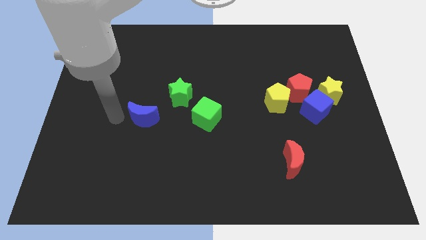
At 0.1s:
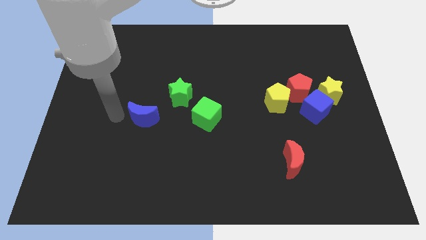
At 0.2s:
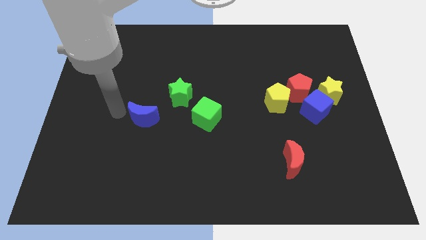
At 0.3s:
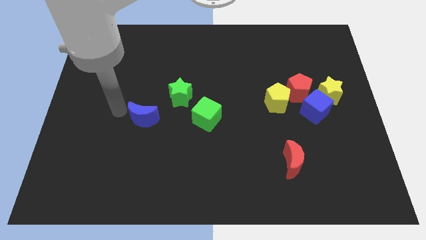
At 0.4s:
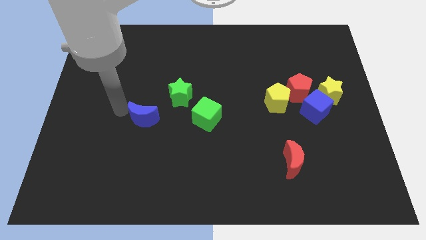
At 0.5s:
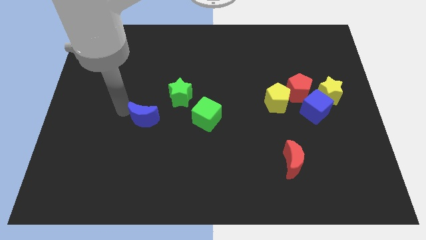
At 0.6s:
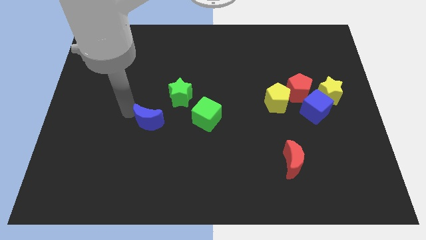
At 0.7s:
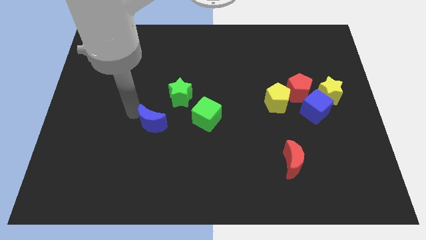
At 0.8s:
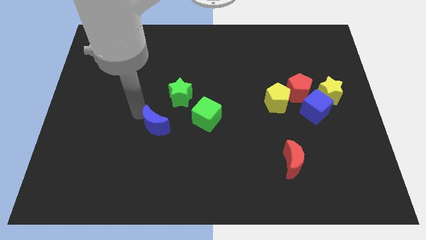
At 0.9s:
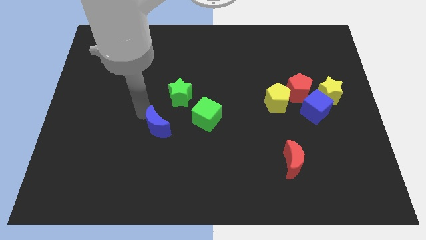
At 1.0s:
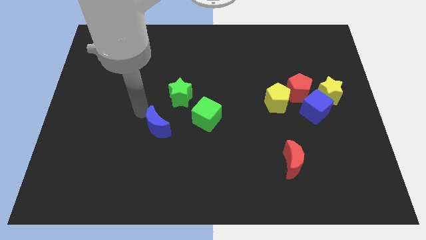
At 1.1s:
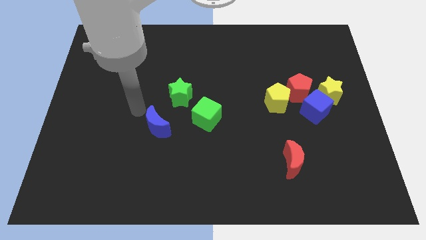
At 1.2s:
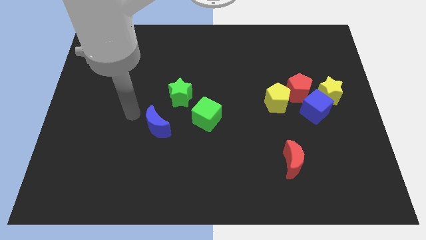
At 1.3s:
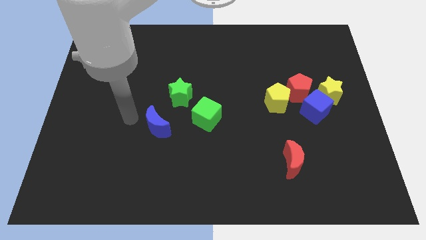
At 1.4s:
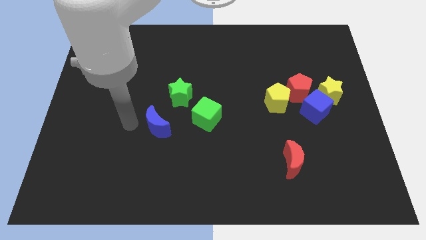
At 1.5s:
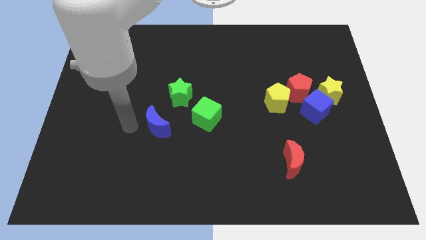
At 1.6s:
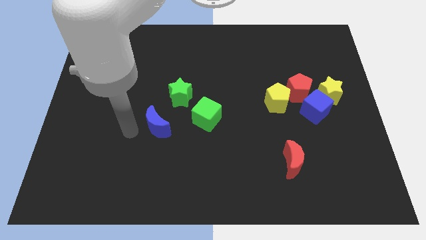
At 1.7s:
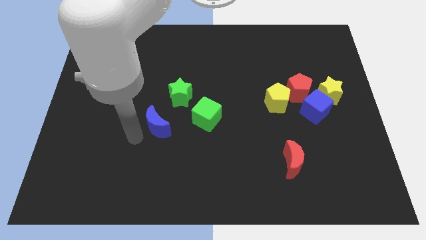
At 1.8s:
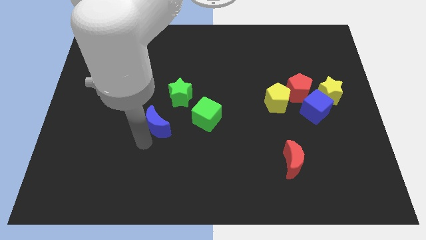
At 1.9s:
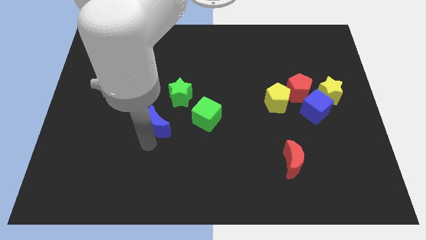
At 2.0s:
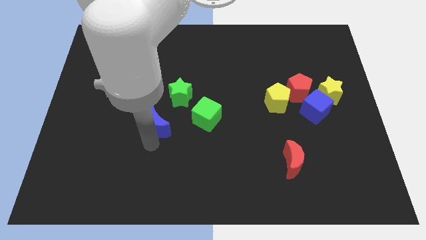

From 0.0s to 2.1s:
move the blue moon close to the green cube

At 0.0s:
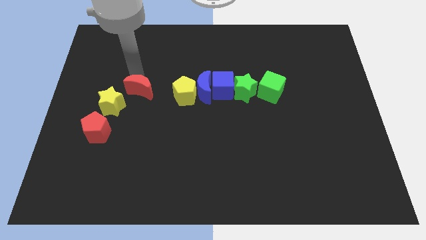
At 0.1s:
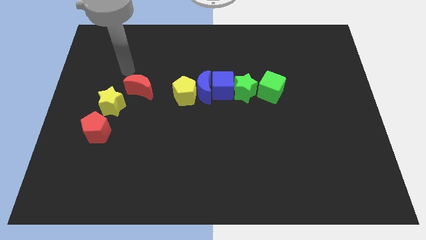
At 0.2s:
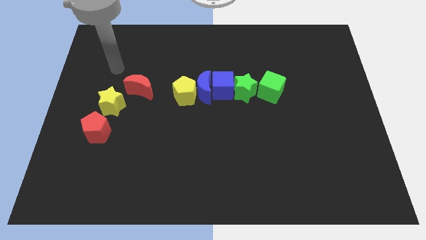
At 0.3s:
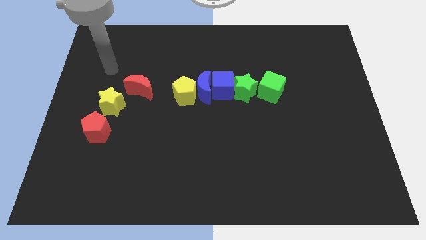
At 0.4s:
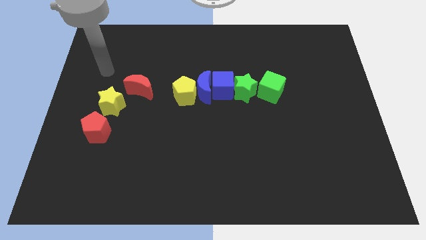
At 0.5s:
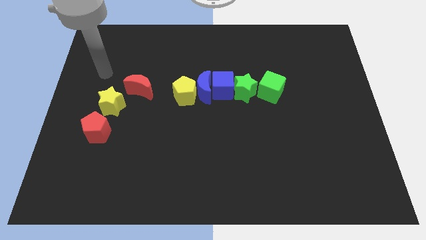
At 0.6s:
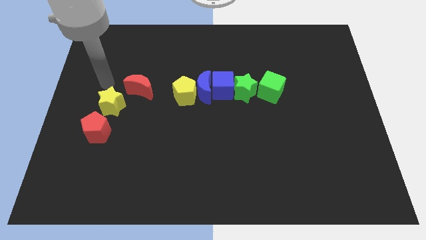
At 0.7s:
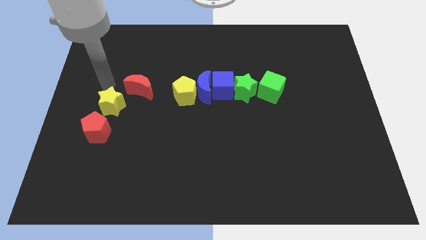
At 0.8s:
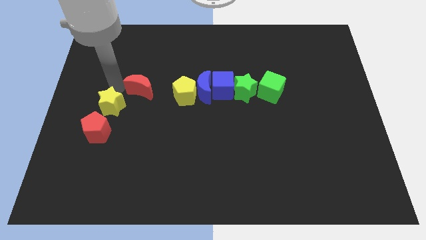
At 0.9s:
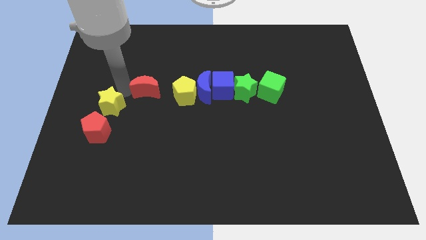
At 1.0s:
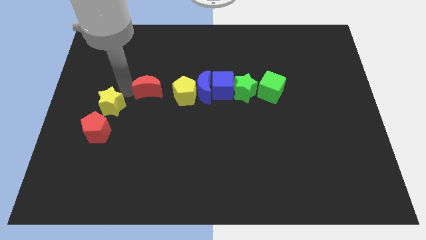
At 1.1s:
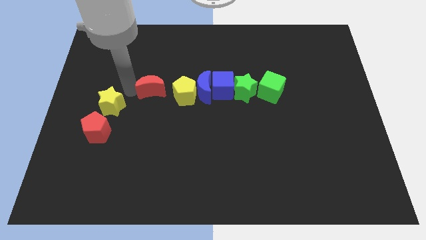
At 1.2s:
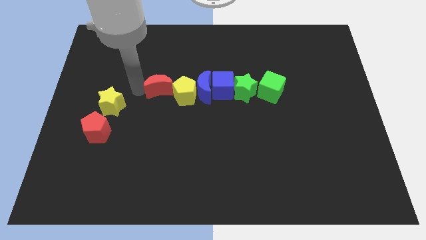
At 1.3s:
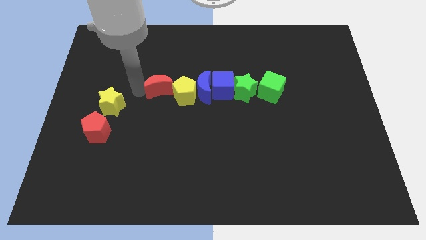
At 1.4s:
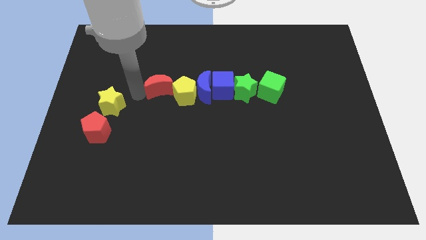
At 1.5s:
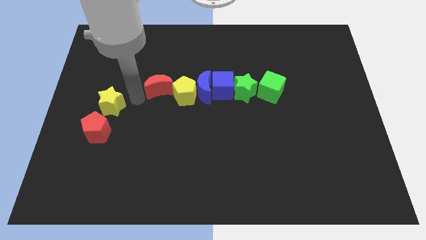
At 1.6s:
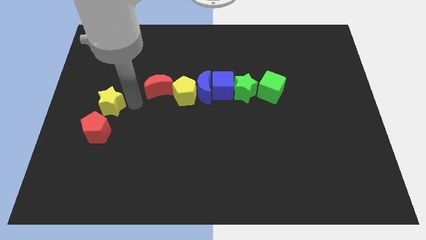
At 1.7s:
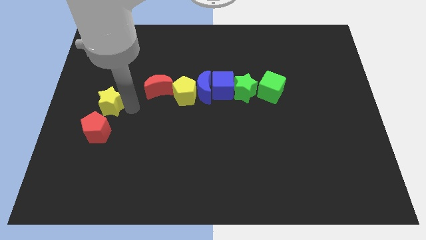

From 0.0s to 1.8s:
place the red crescent to the left of the yellow pentagon

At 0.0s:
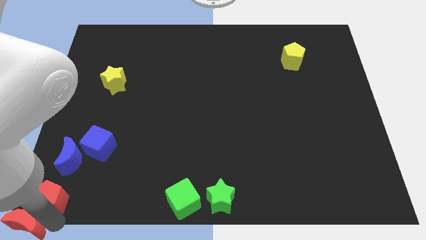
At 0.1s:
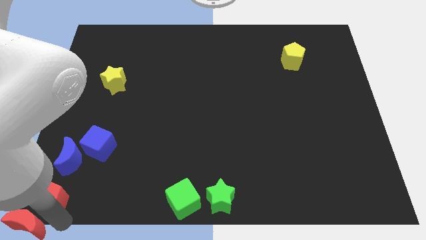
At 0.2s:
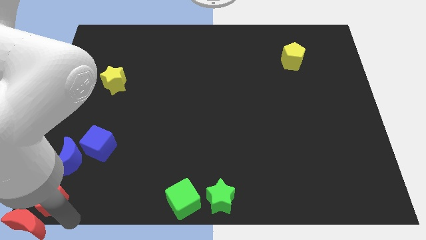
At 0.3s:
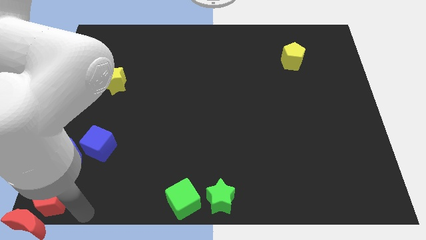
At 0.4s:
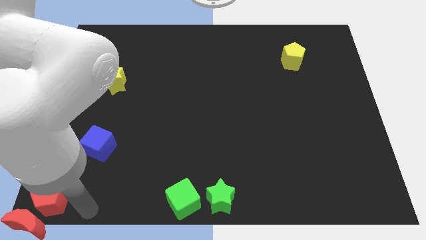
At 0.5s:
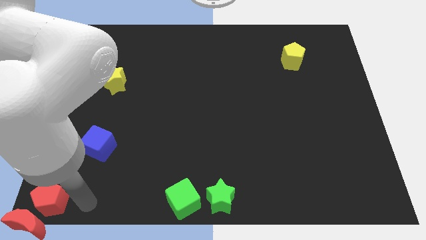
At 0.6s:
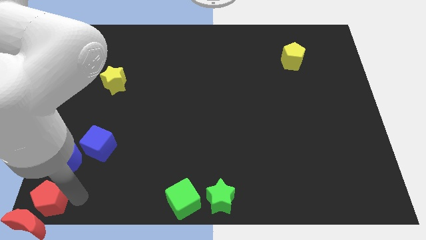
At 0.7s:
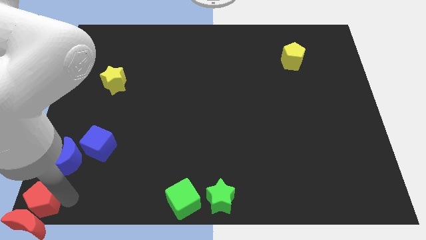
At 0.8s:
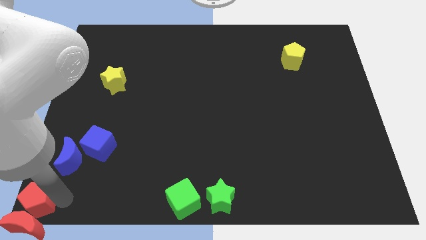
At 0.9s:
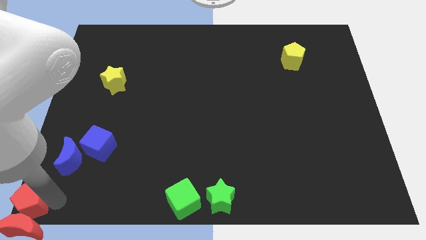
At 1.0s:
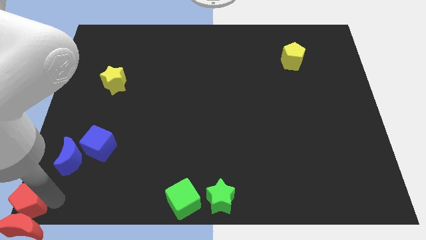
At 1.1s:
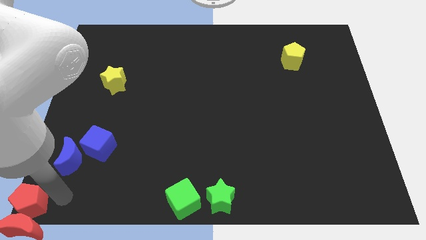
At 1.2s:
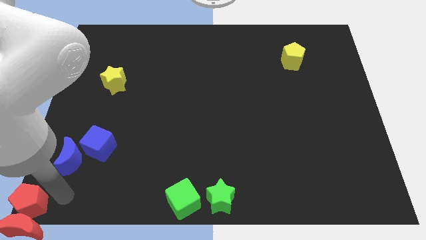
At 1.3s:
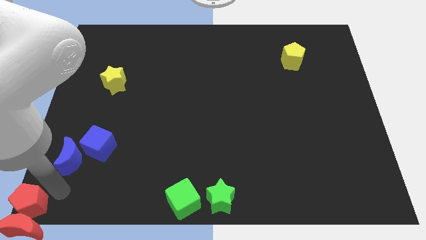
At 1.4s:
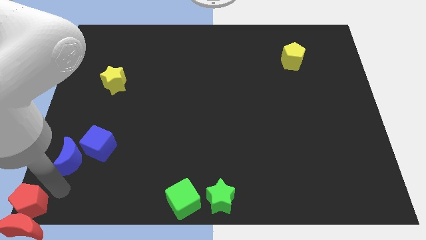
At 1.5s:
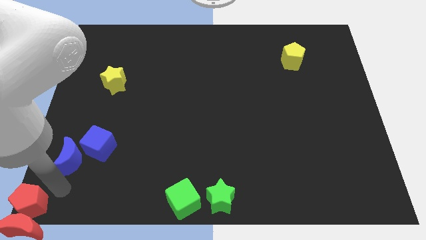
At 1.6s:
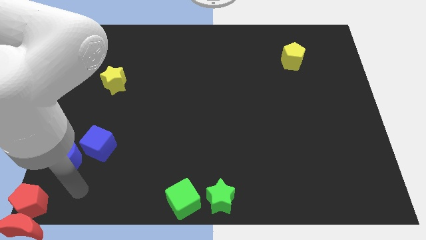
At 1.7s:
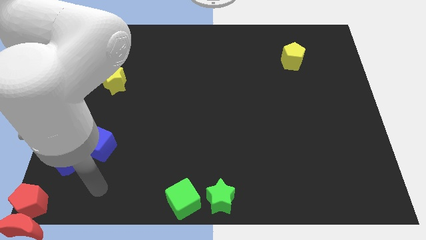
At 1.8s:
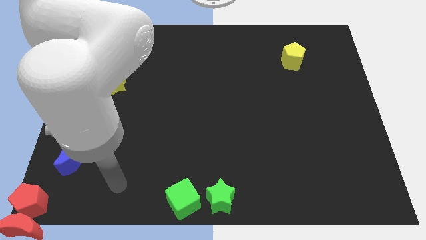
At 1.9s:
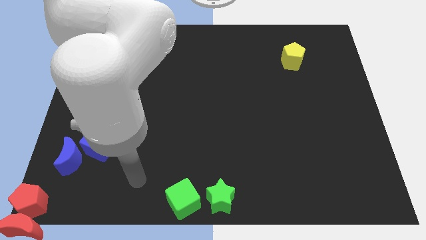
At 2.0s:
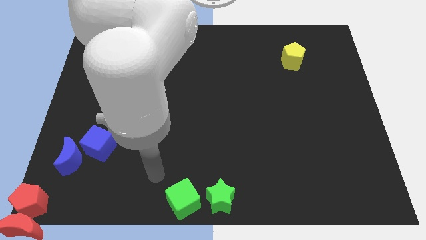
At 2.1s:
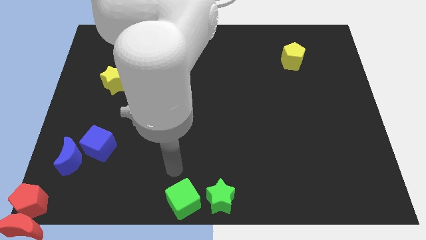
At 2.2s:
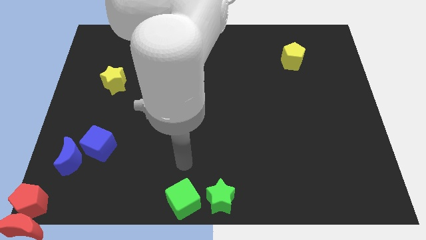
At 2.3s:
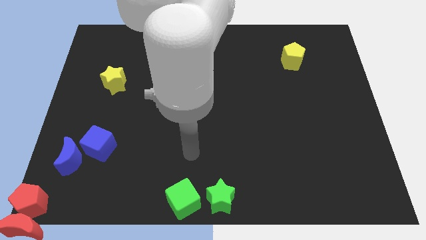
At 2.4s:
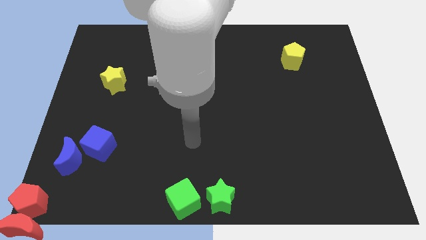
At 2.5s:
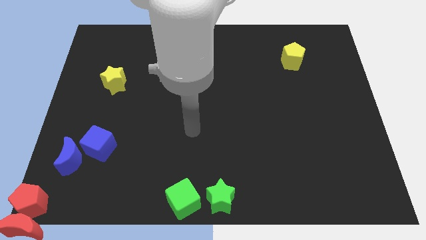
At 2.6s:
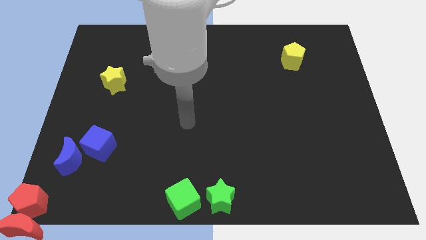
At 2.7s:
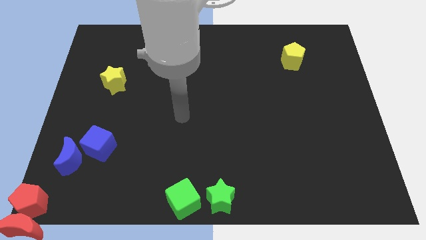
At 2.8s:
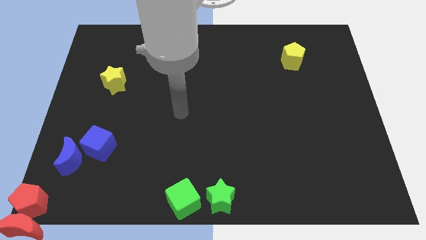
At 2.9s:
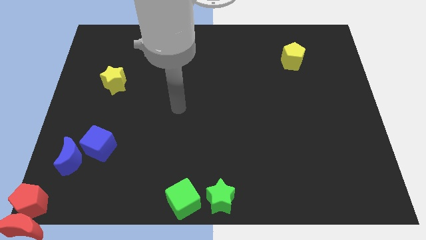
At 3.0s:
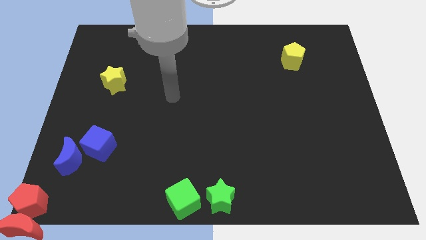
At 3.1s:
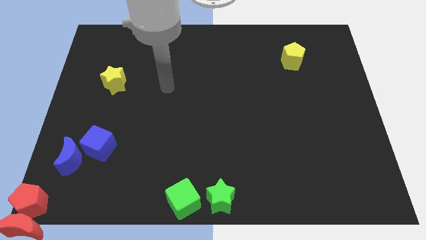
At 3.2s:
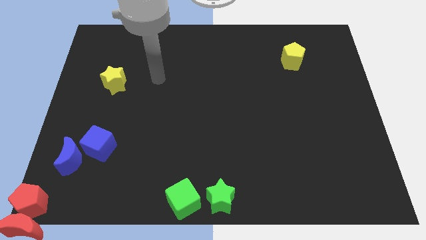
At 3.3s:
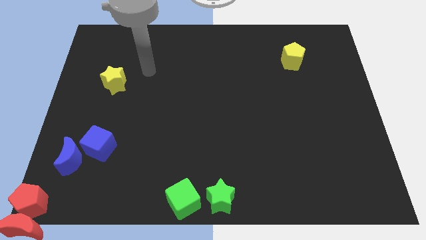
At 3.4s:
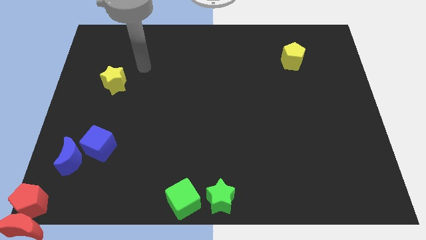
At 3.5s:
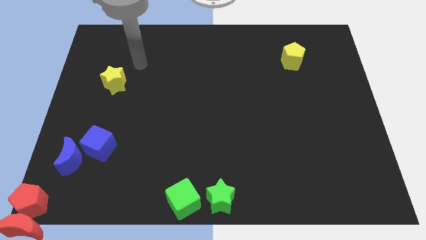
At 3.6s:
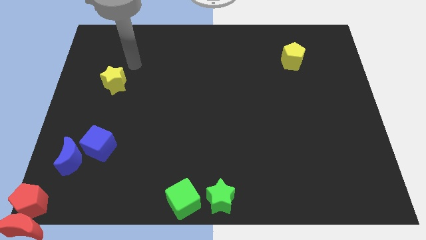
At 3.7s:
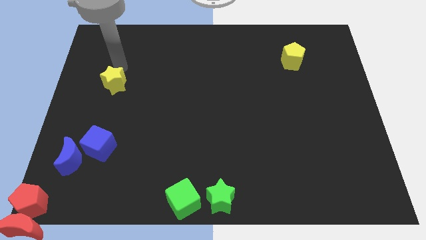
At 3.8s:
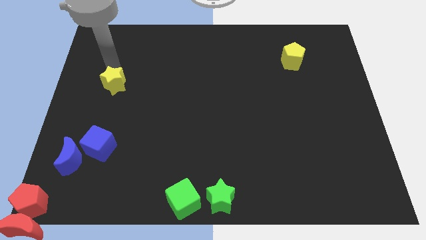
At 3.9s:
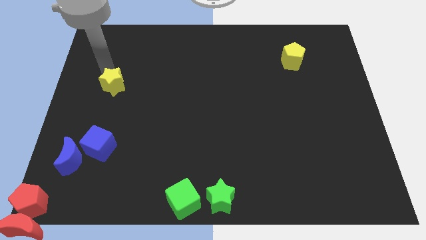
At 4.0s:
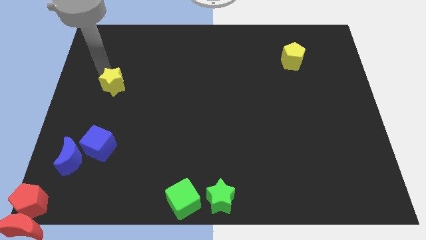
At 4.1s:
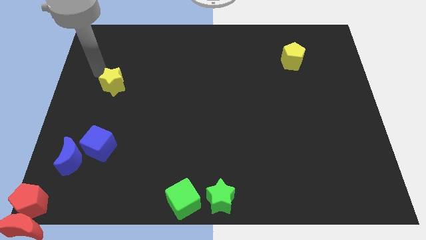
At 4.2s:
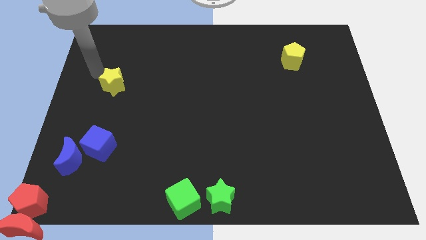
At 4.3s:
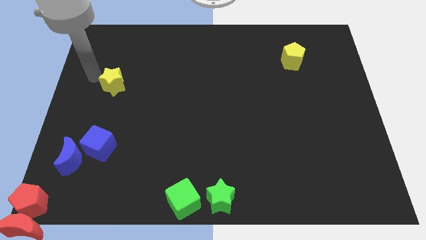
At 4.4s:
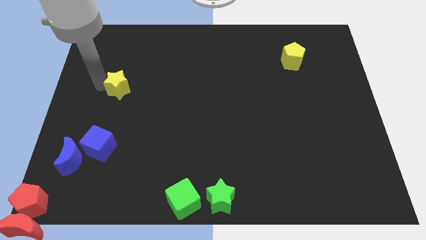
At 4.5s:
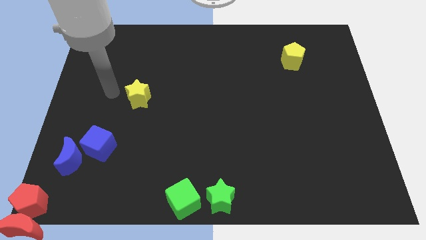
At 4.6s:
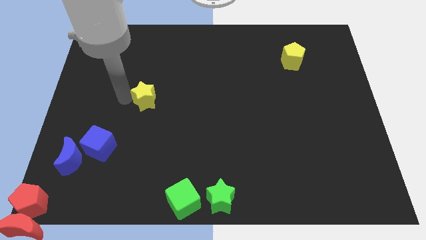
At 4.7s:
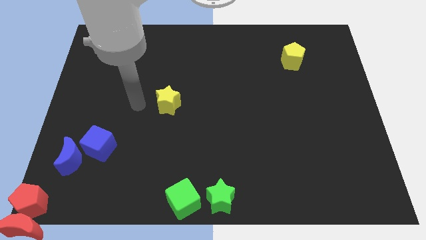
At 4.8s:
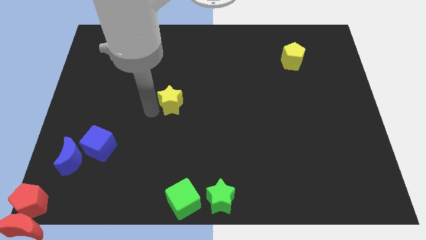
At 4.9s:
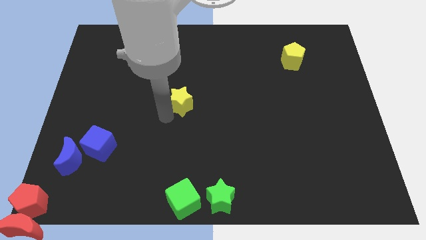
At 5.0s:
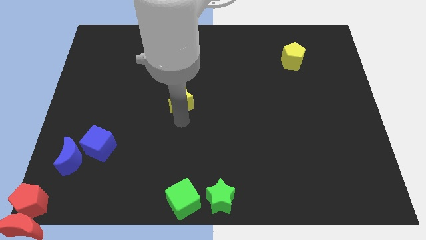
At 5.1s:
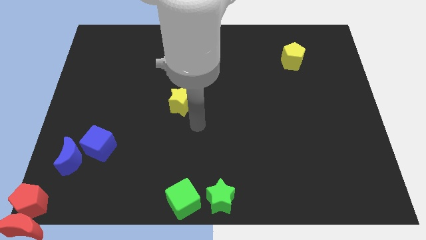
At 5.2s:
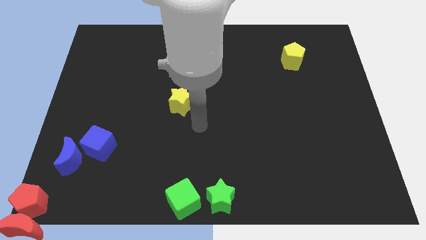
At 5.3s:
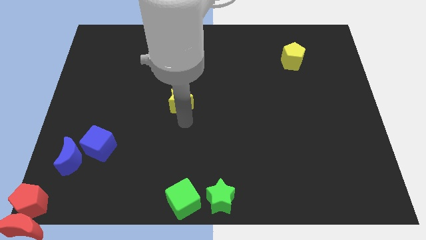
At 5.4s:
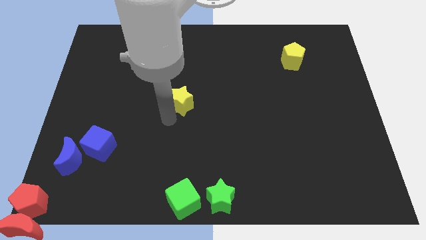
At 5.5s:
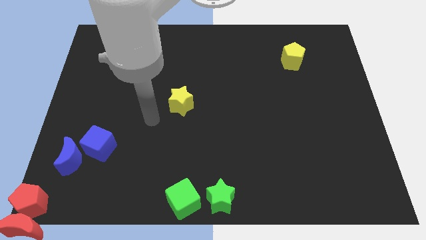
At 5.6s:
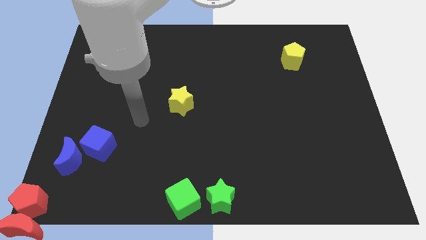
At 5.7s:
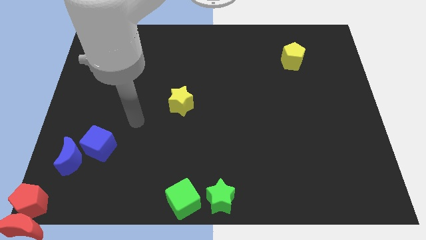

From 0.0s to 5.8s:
push the yellow star to the center of the board
